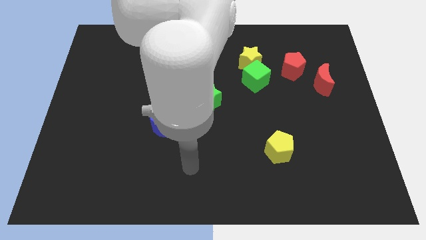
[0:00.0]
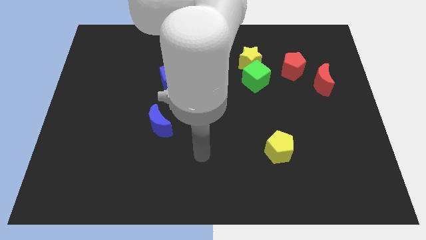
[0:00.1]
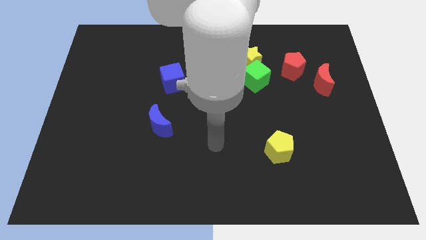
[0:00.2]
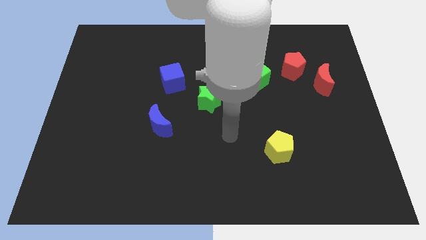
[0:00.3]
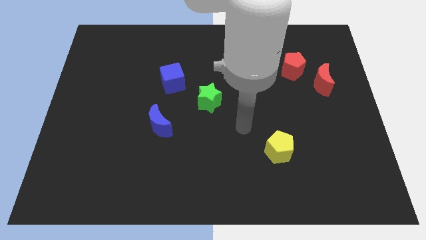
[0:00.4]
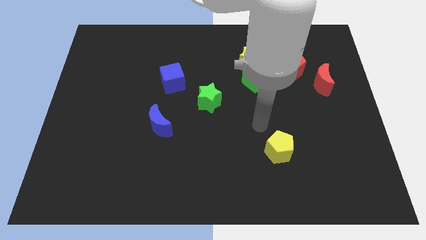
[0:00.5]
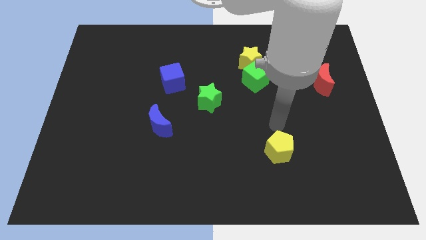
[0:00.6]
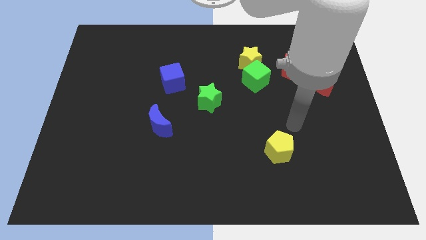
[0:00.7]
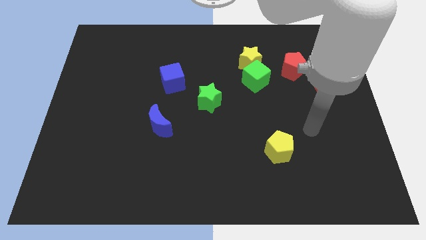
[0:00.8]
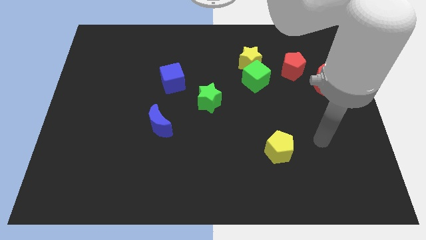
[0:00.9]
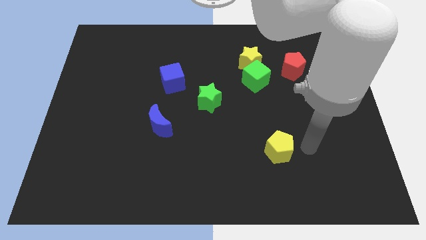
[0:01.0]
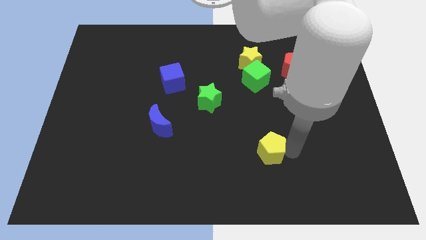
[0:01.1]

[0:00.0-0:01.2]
move the arm towards the right of yellow pentagon

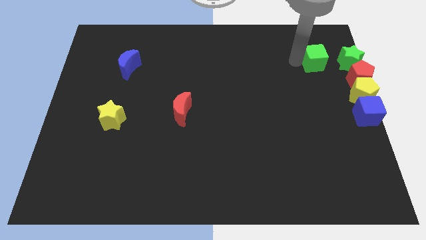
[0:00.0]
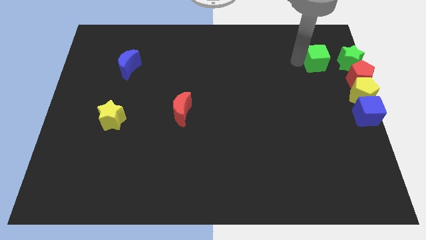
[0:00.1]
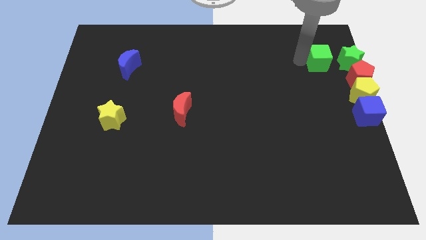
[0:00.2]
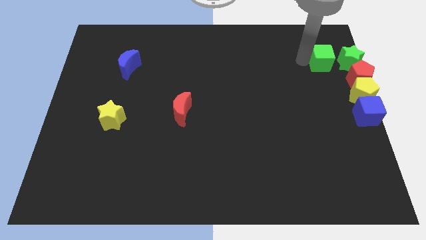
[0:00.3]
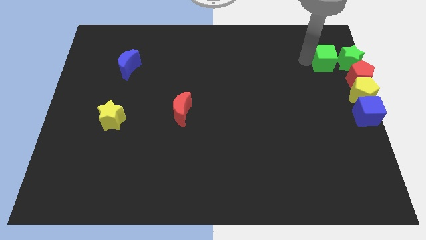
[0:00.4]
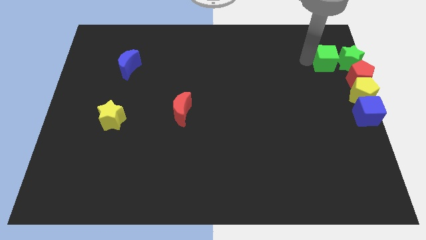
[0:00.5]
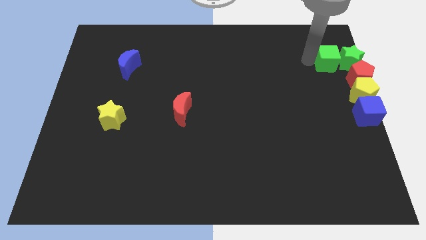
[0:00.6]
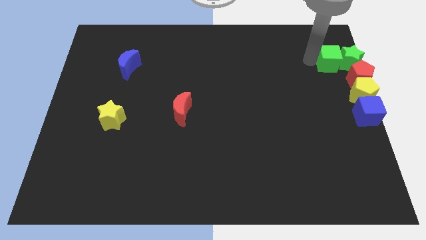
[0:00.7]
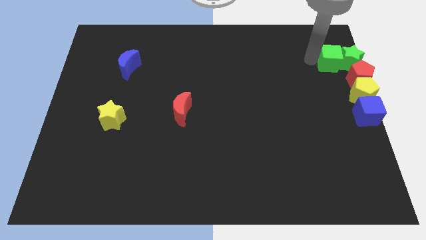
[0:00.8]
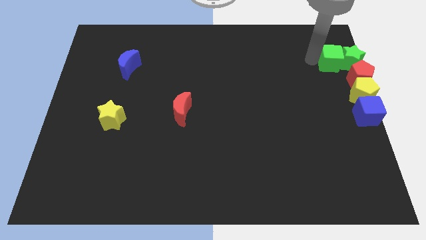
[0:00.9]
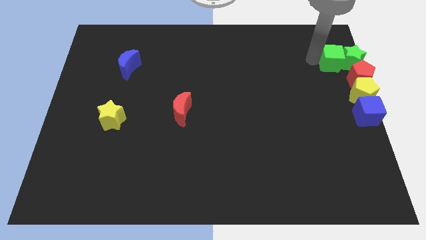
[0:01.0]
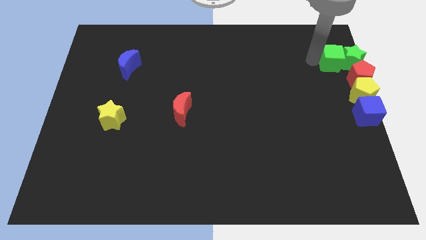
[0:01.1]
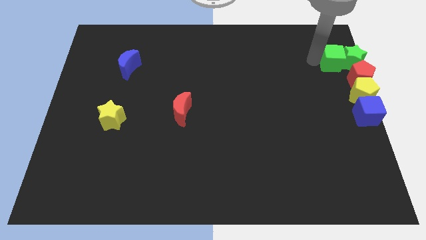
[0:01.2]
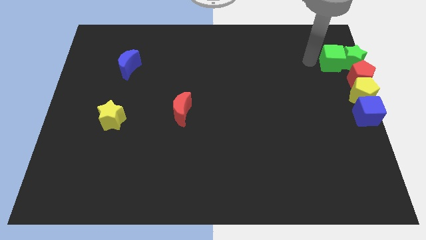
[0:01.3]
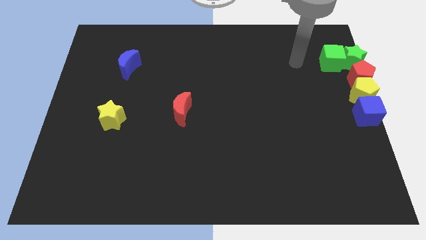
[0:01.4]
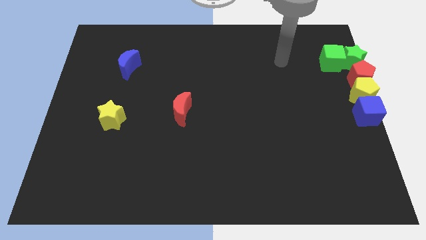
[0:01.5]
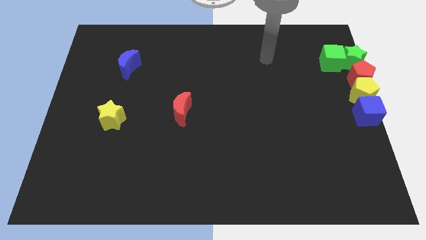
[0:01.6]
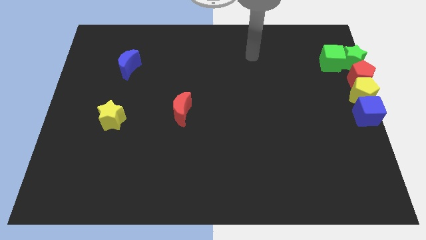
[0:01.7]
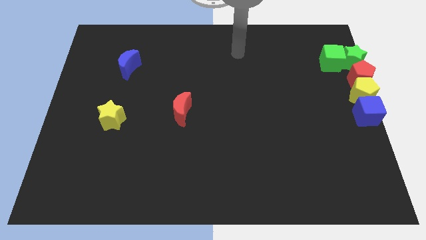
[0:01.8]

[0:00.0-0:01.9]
push the green cube into the green star

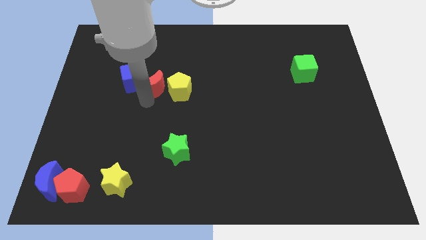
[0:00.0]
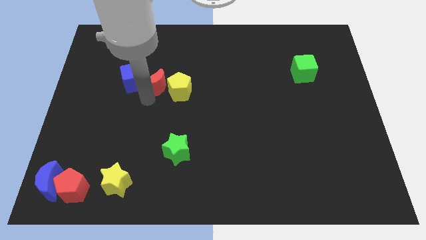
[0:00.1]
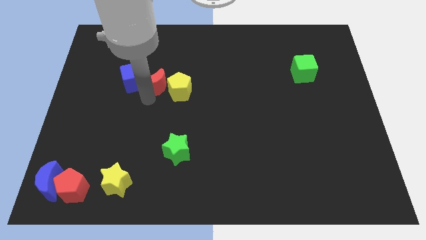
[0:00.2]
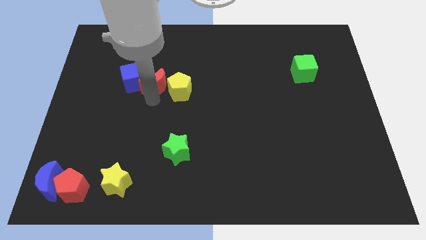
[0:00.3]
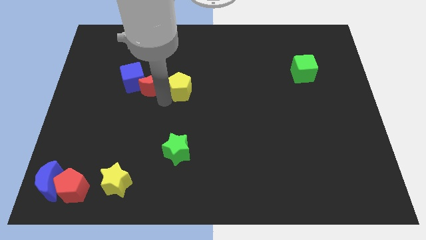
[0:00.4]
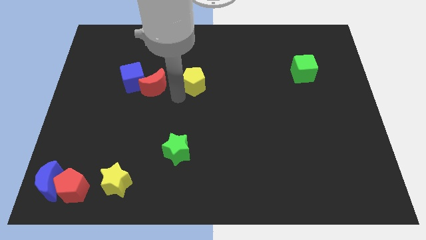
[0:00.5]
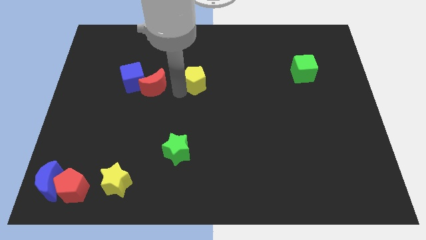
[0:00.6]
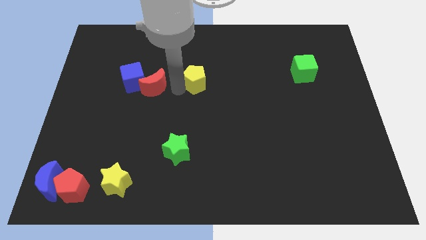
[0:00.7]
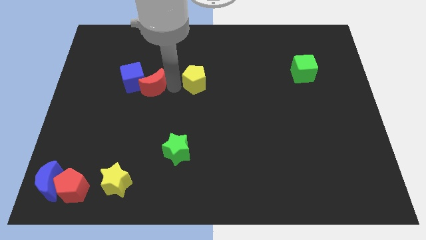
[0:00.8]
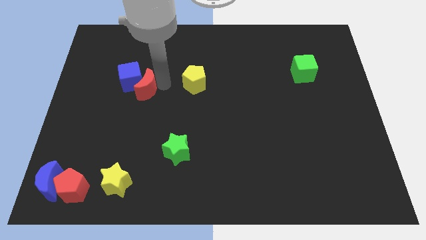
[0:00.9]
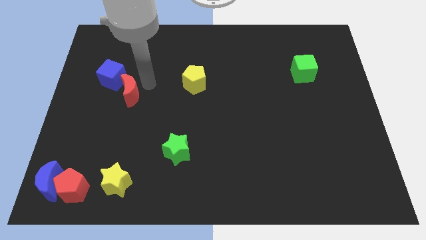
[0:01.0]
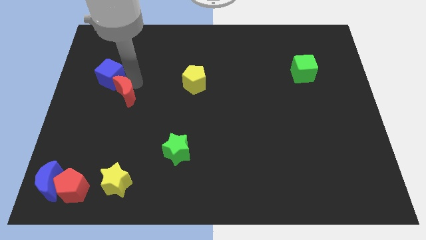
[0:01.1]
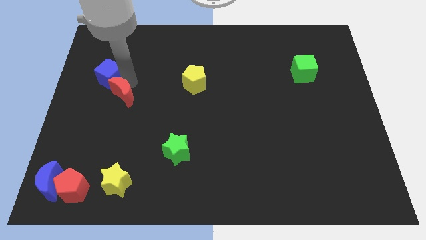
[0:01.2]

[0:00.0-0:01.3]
push the red crescent below the blue cube

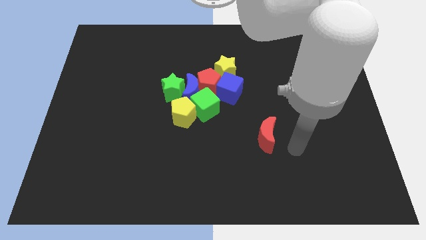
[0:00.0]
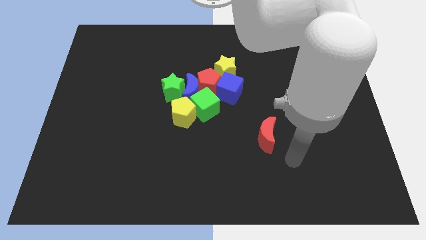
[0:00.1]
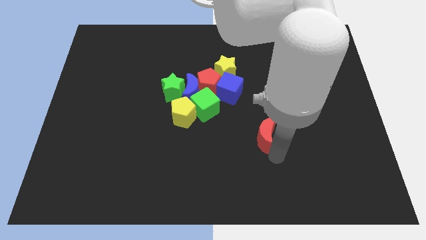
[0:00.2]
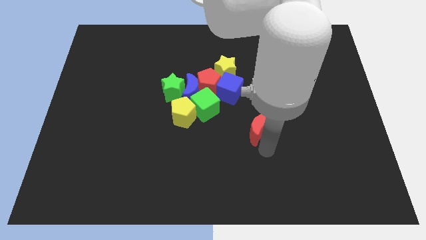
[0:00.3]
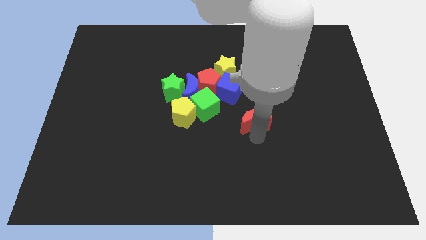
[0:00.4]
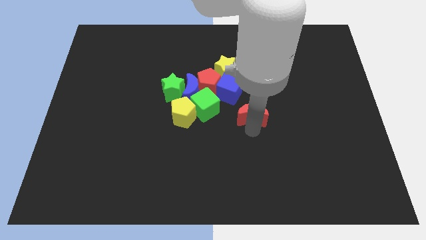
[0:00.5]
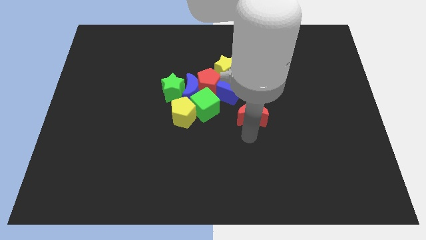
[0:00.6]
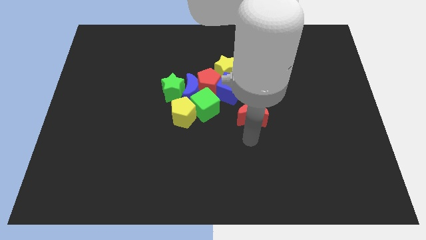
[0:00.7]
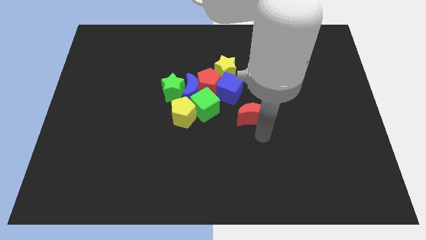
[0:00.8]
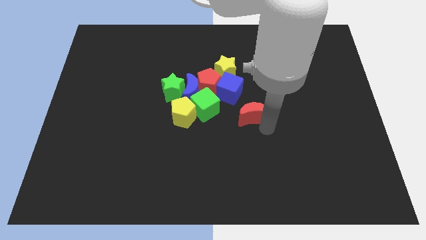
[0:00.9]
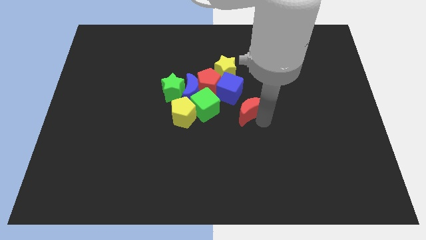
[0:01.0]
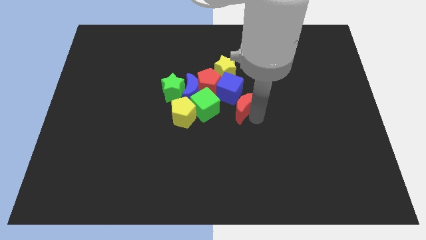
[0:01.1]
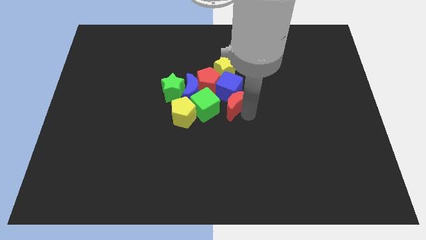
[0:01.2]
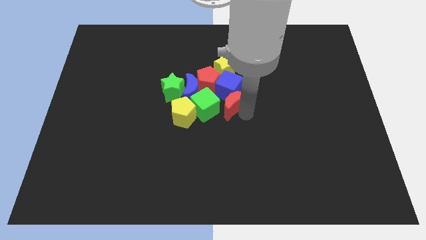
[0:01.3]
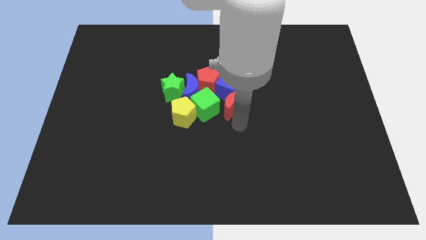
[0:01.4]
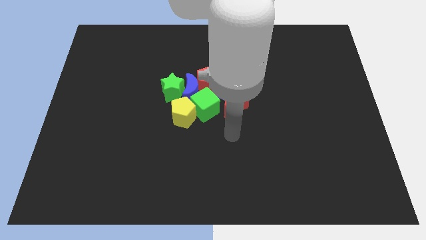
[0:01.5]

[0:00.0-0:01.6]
push the red moon into bottom of blue cube

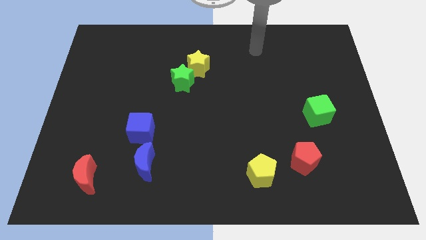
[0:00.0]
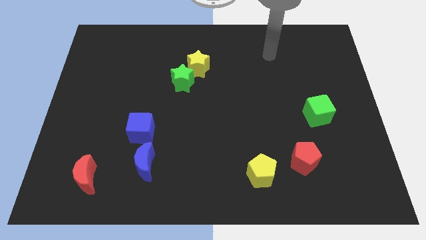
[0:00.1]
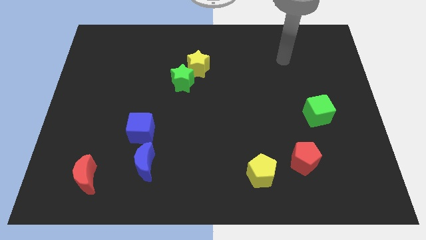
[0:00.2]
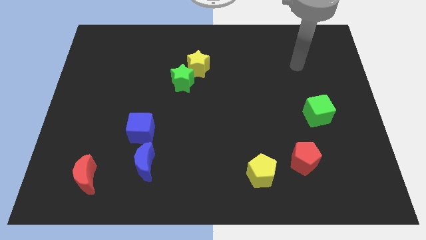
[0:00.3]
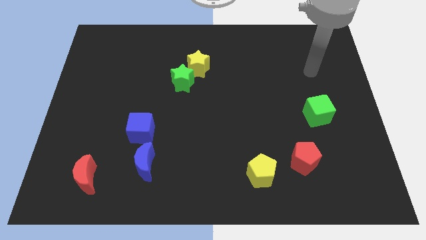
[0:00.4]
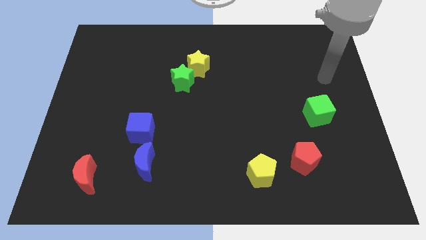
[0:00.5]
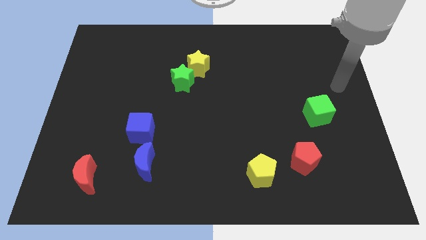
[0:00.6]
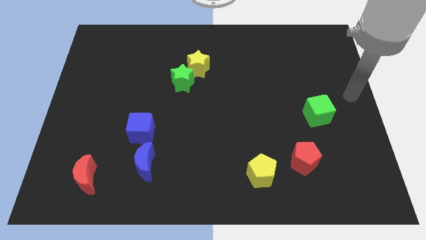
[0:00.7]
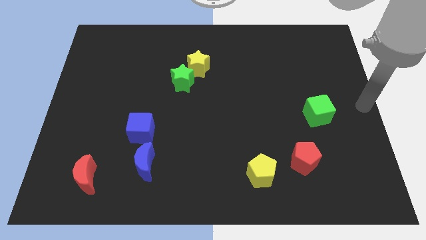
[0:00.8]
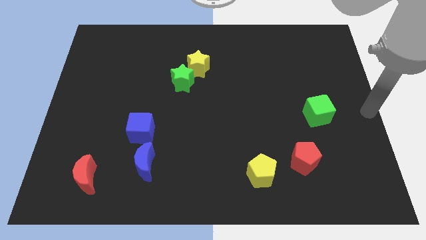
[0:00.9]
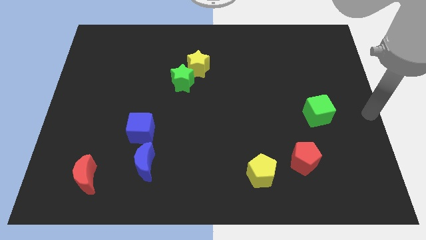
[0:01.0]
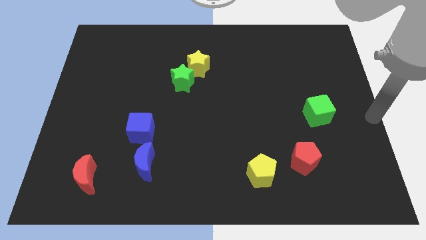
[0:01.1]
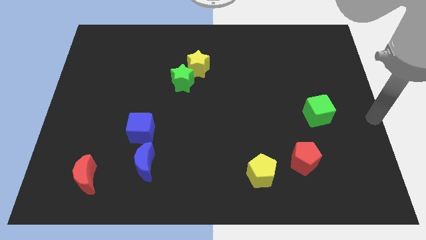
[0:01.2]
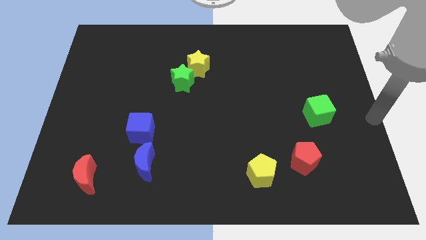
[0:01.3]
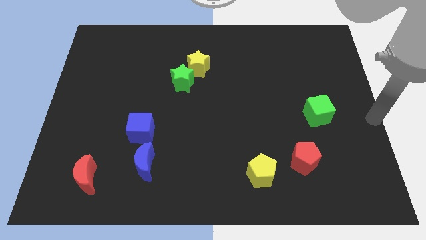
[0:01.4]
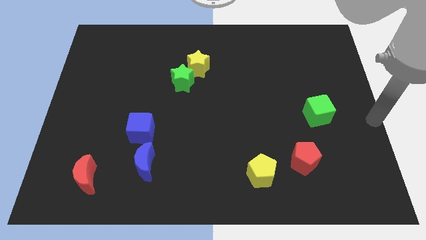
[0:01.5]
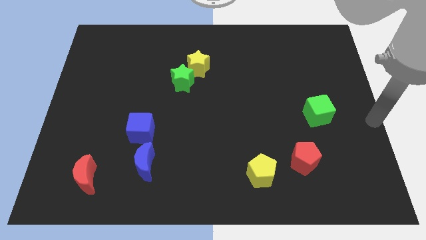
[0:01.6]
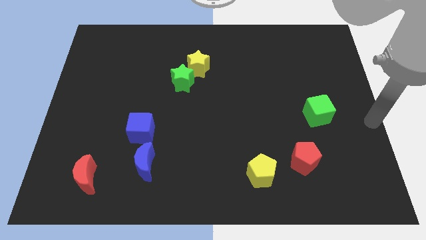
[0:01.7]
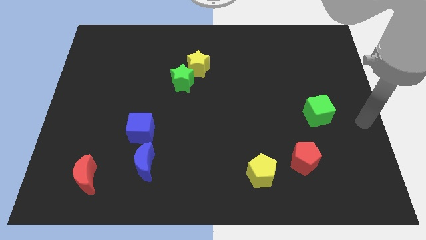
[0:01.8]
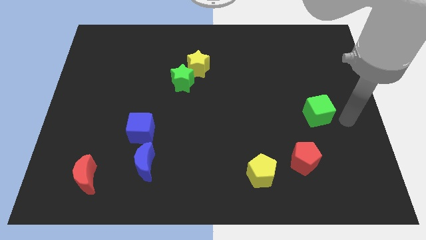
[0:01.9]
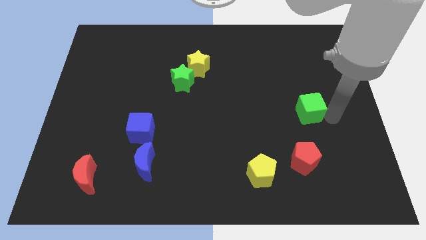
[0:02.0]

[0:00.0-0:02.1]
tap your arm to the right bottom side of green cube

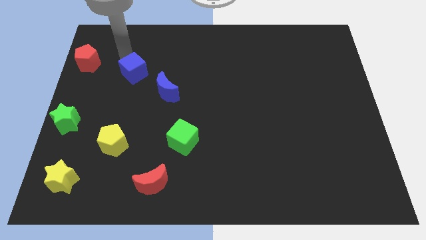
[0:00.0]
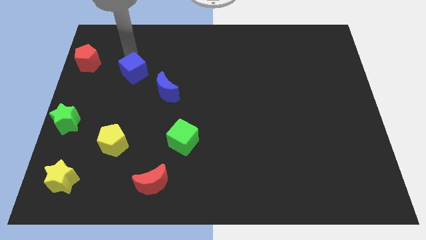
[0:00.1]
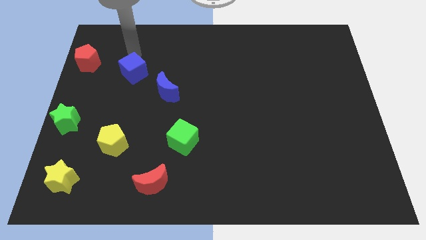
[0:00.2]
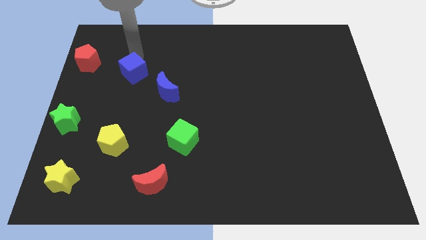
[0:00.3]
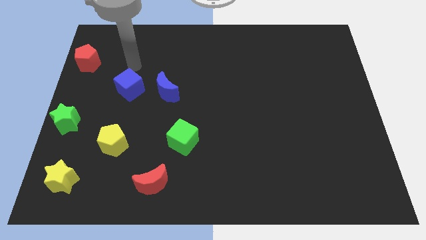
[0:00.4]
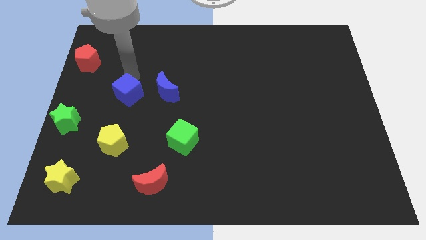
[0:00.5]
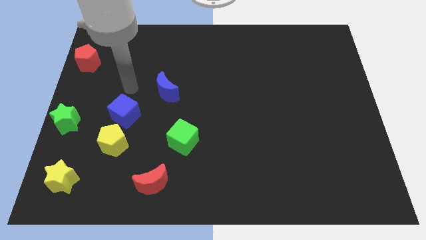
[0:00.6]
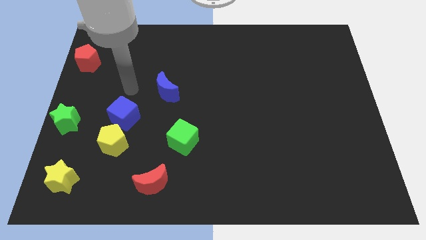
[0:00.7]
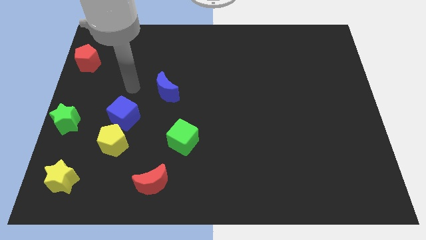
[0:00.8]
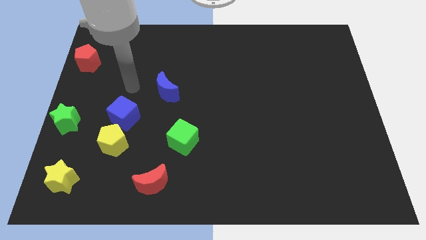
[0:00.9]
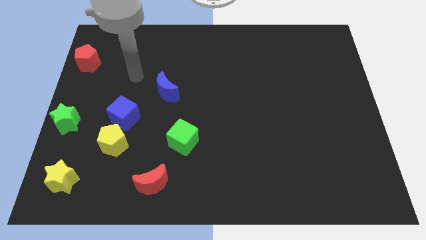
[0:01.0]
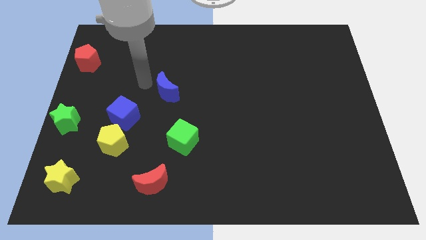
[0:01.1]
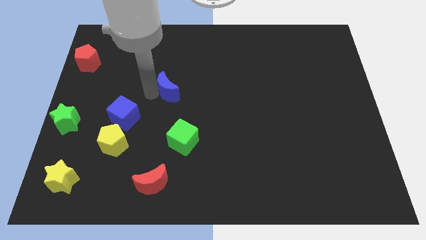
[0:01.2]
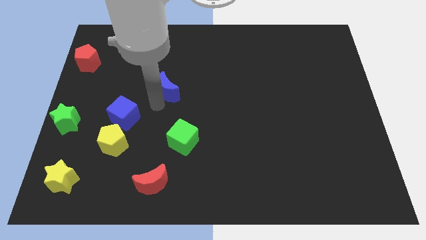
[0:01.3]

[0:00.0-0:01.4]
push the blue cube above the yellow pentagon
